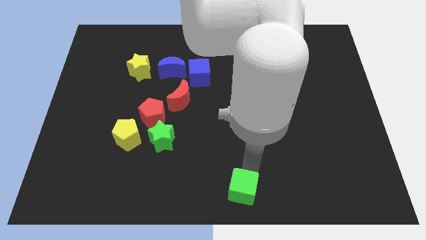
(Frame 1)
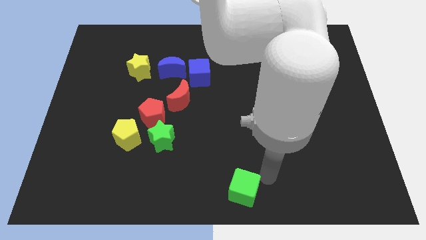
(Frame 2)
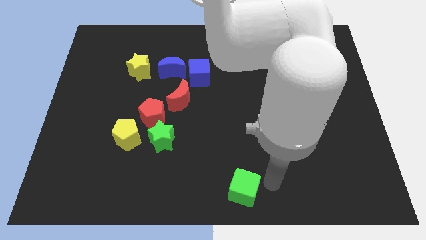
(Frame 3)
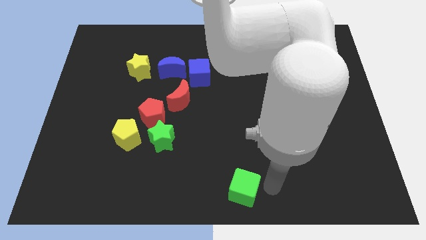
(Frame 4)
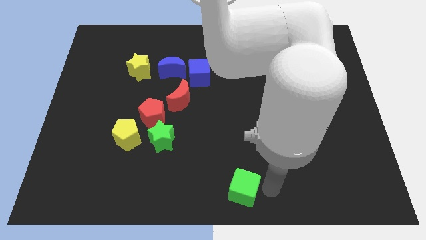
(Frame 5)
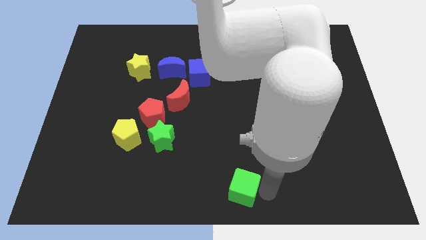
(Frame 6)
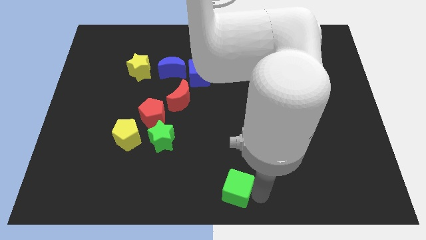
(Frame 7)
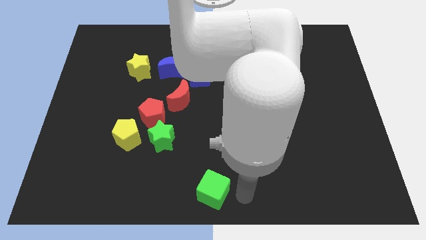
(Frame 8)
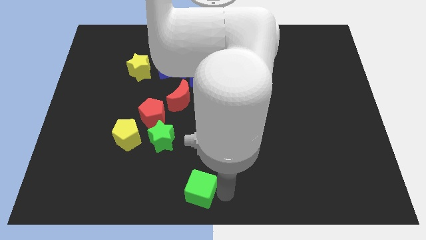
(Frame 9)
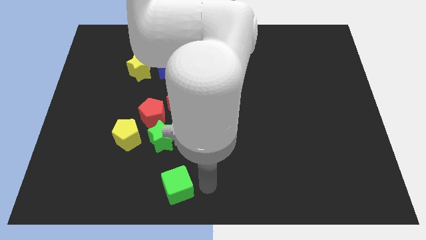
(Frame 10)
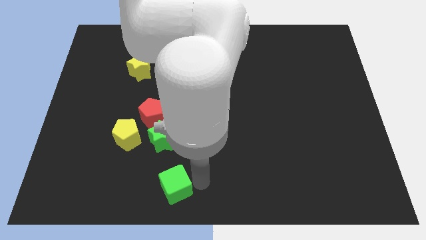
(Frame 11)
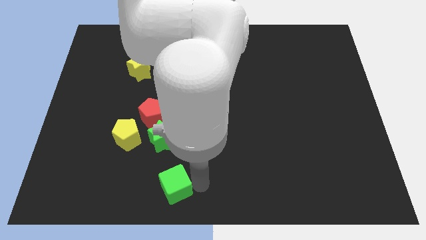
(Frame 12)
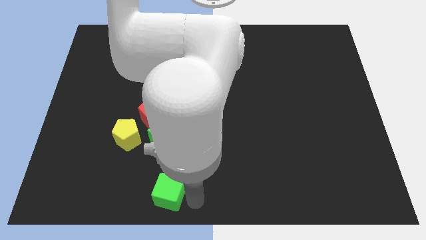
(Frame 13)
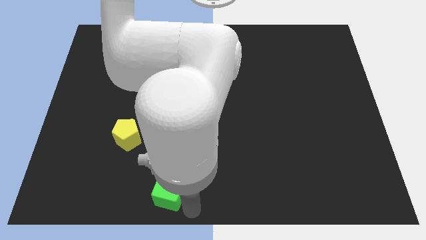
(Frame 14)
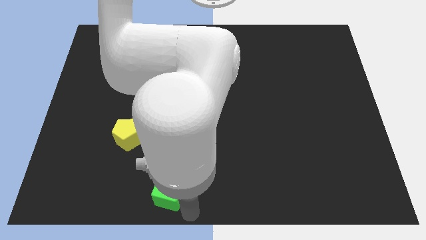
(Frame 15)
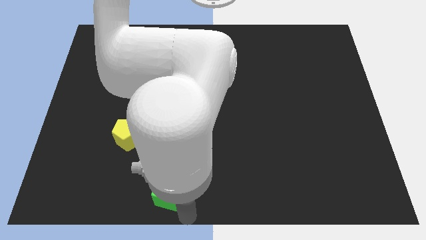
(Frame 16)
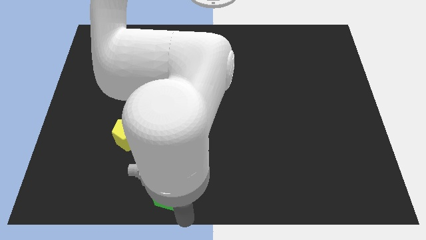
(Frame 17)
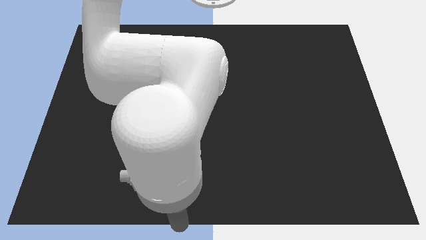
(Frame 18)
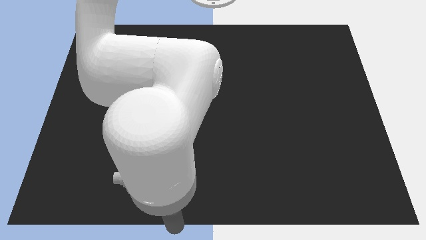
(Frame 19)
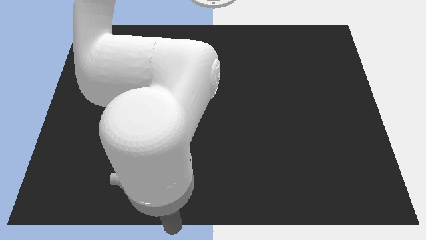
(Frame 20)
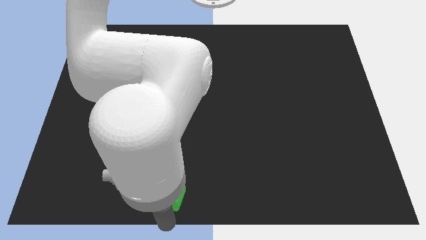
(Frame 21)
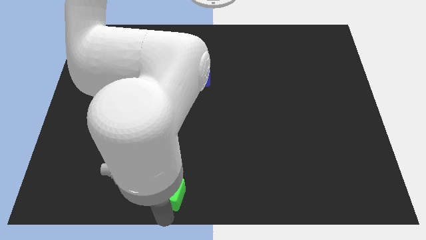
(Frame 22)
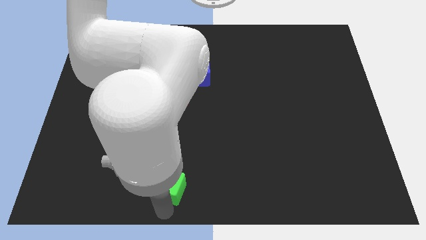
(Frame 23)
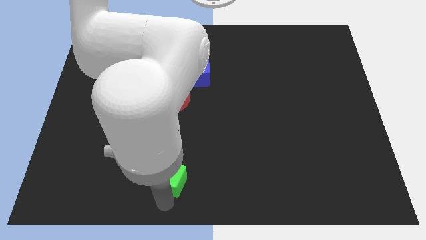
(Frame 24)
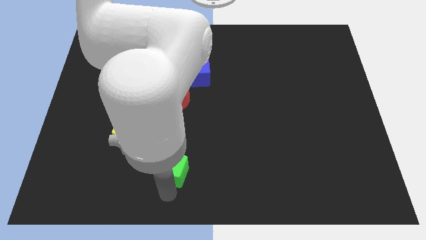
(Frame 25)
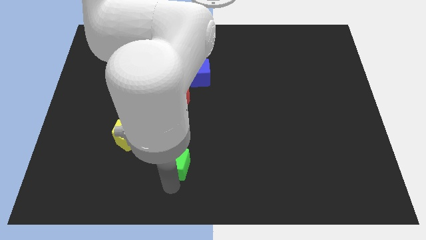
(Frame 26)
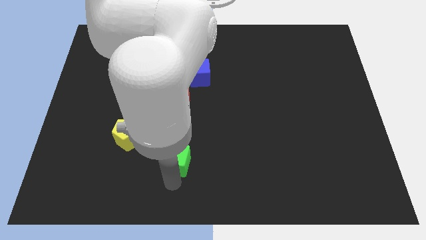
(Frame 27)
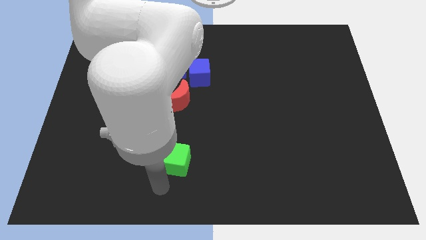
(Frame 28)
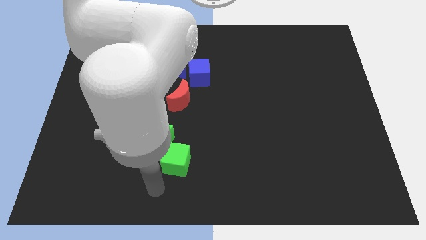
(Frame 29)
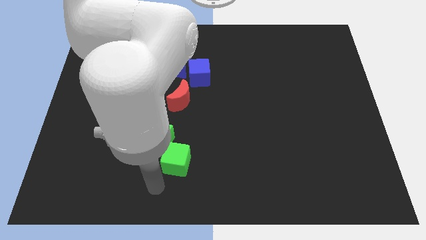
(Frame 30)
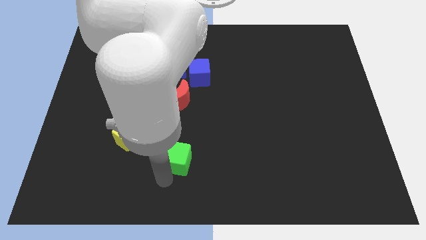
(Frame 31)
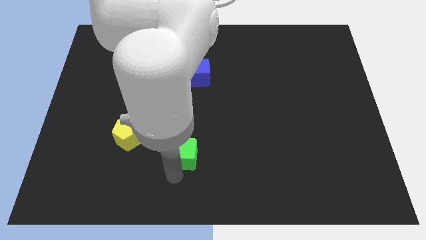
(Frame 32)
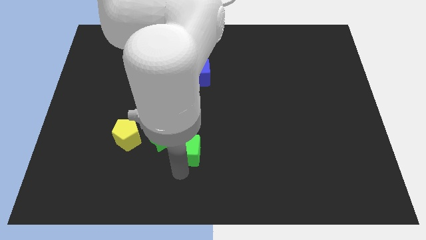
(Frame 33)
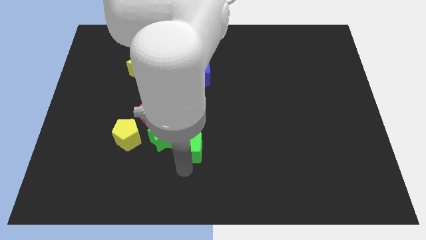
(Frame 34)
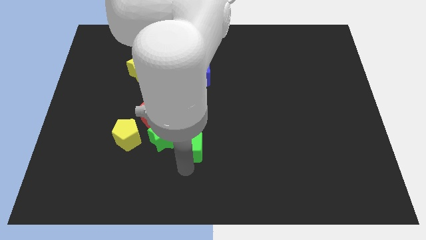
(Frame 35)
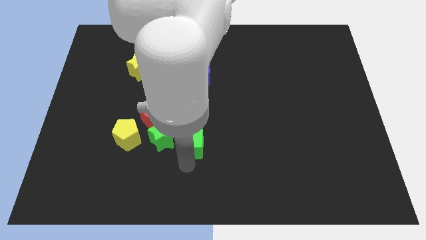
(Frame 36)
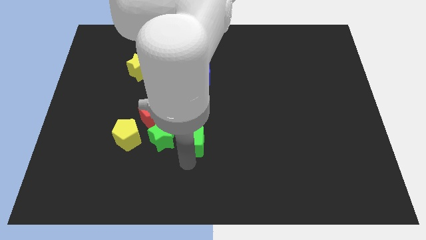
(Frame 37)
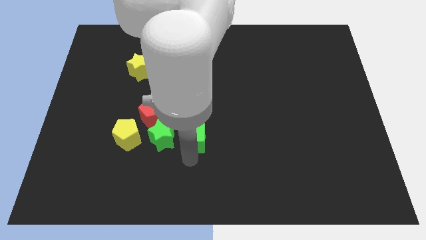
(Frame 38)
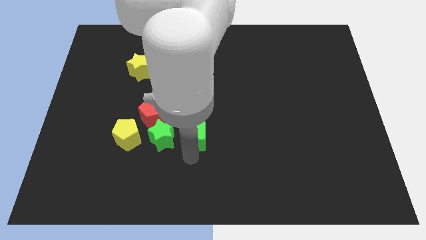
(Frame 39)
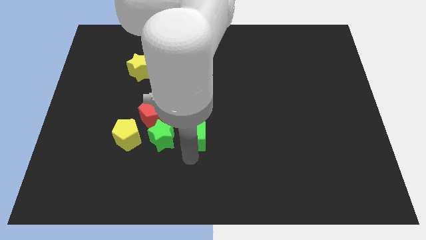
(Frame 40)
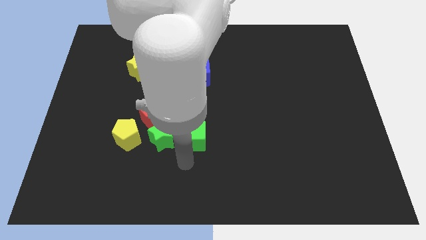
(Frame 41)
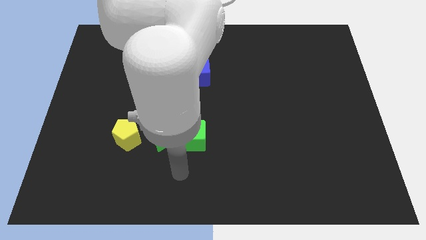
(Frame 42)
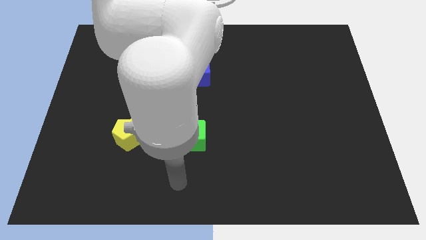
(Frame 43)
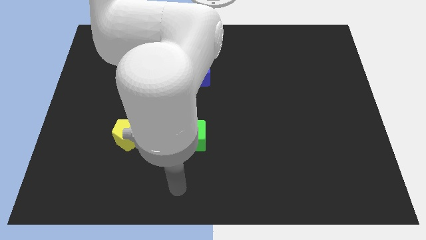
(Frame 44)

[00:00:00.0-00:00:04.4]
place green cube right to green star

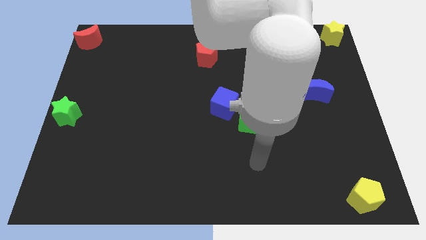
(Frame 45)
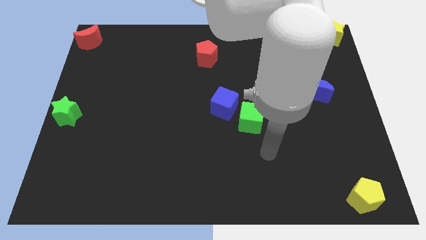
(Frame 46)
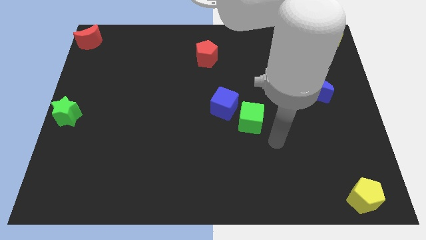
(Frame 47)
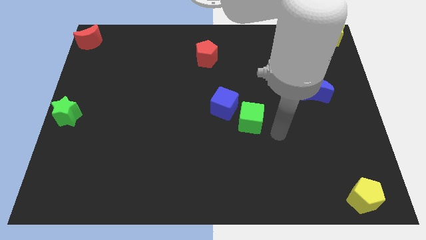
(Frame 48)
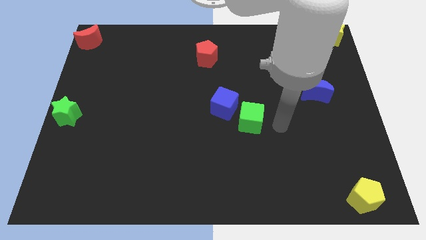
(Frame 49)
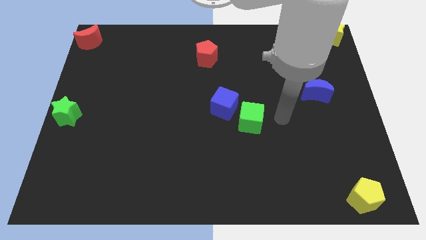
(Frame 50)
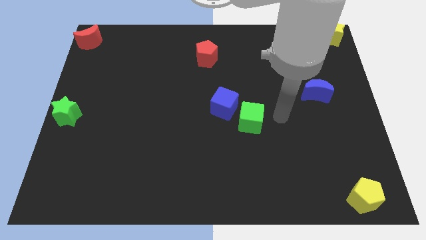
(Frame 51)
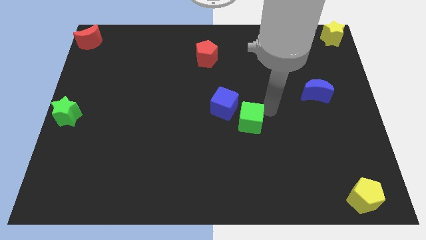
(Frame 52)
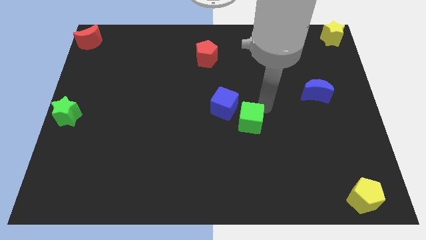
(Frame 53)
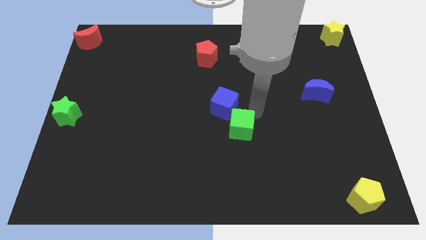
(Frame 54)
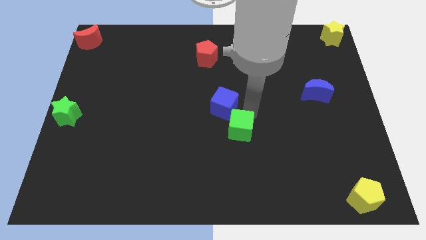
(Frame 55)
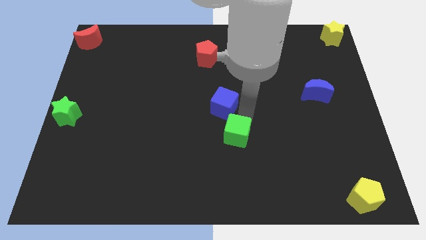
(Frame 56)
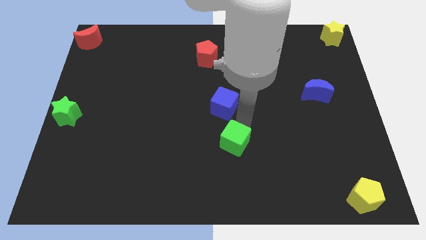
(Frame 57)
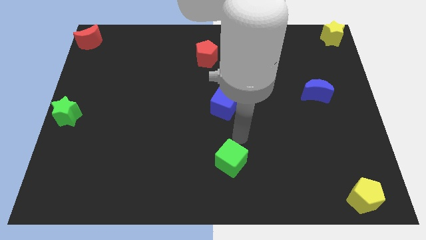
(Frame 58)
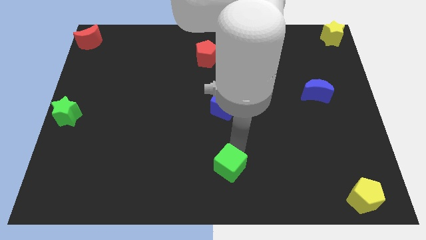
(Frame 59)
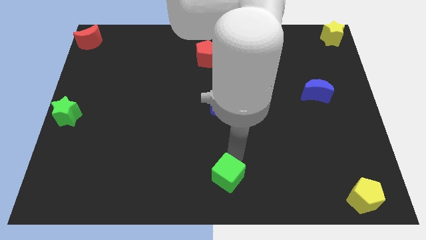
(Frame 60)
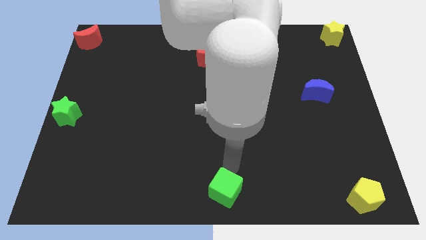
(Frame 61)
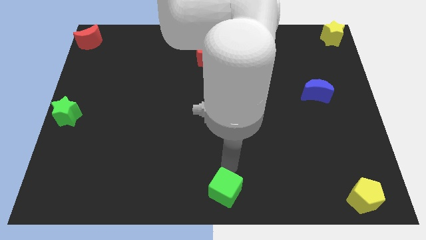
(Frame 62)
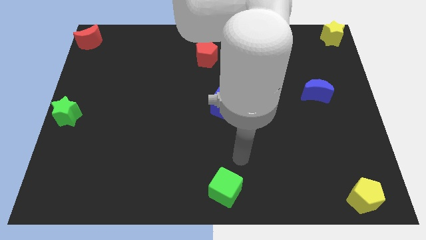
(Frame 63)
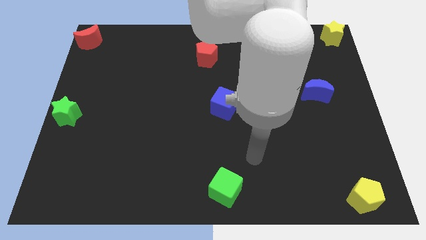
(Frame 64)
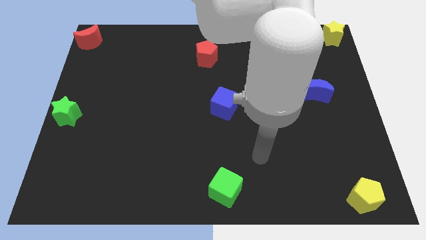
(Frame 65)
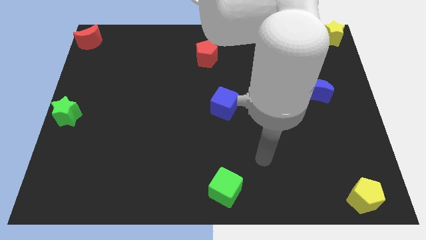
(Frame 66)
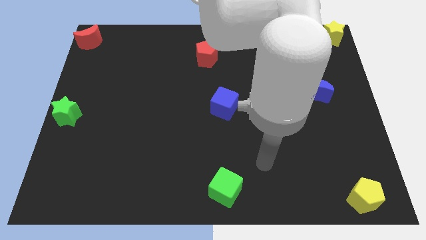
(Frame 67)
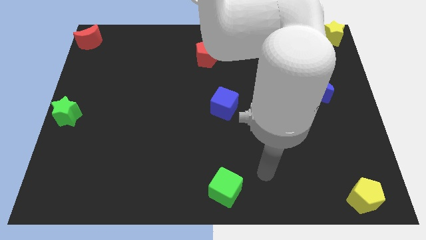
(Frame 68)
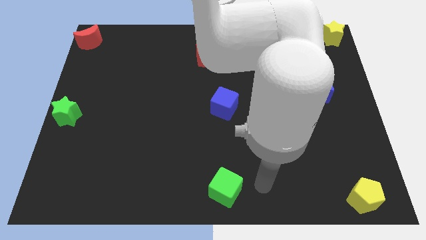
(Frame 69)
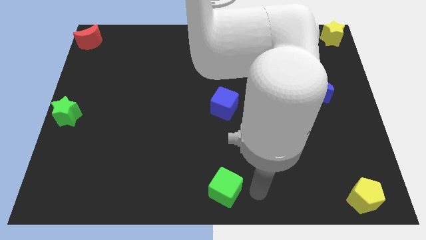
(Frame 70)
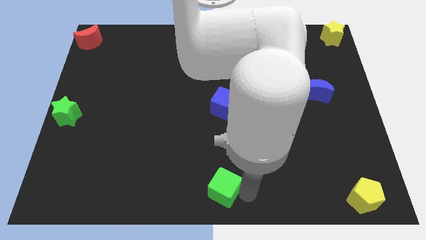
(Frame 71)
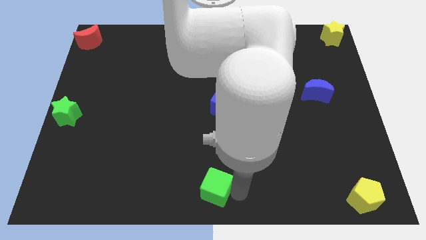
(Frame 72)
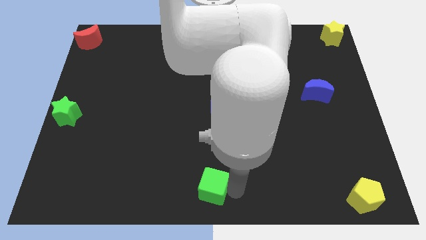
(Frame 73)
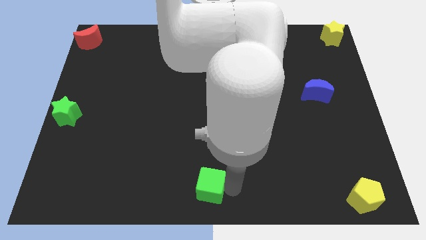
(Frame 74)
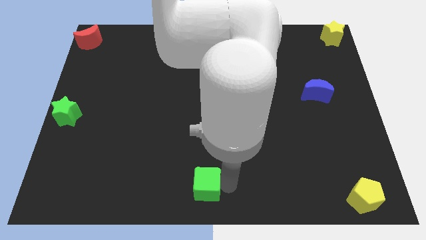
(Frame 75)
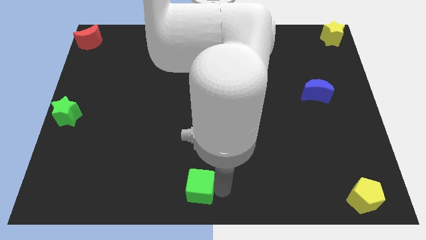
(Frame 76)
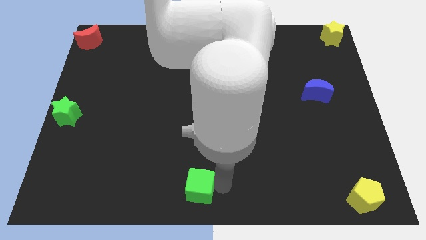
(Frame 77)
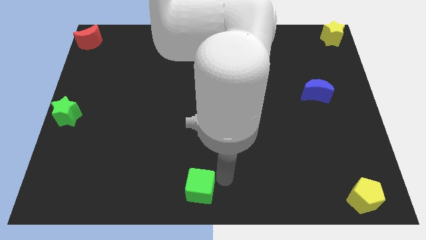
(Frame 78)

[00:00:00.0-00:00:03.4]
push the green cube in the downward direction on the board

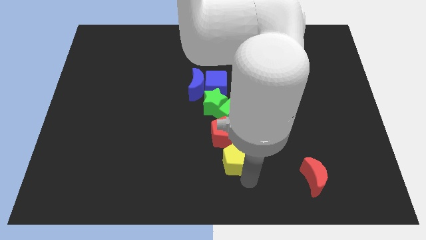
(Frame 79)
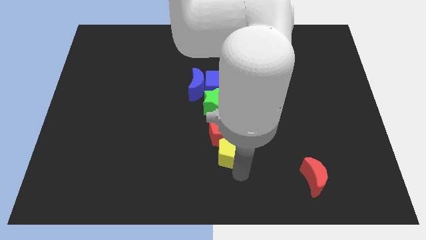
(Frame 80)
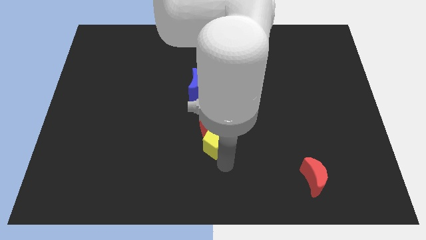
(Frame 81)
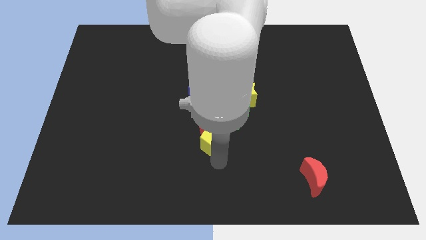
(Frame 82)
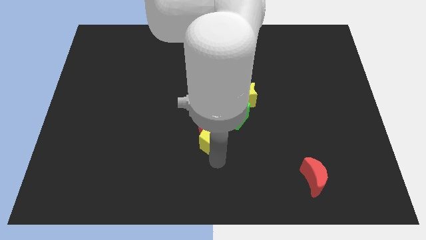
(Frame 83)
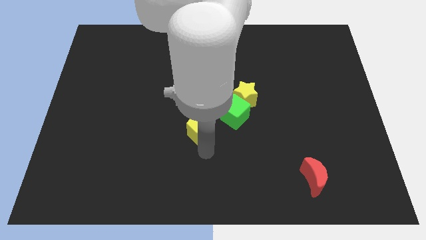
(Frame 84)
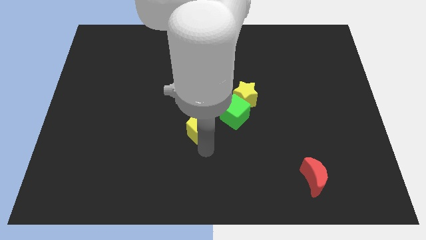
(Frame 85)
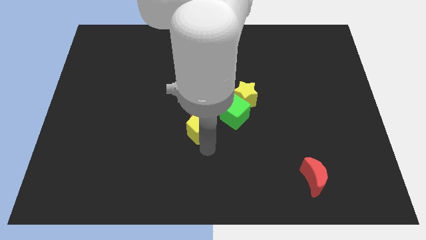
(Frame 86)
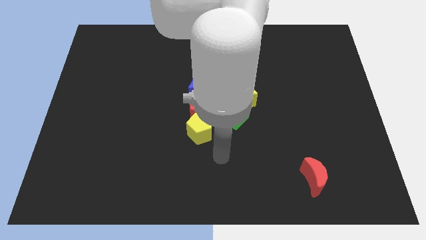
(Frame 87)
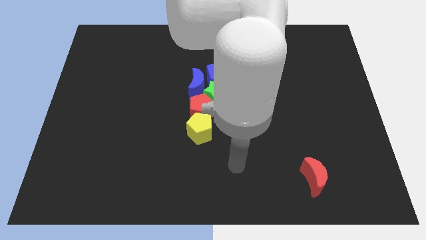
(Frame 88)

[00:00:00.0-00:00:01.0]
push the yellow pentagon into the red pentagon

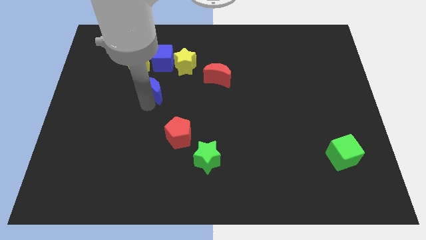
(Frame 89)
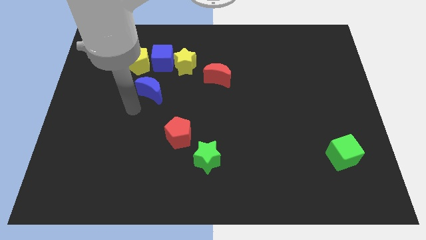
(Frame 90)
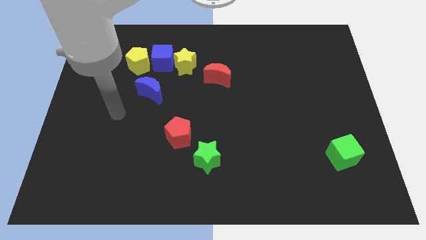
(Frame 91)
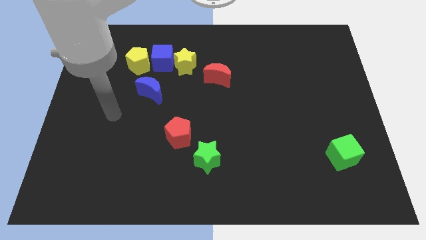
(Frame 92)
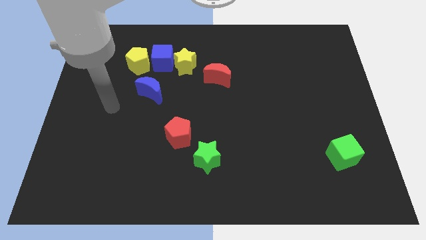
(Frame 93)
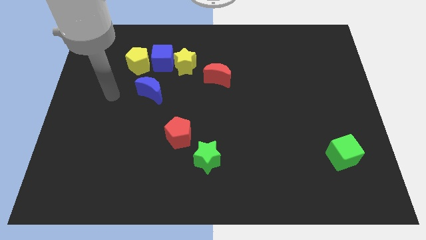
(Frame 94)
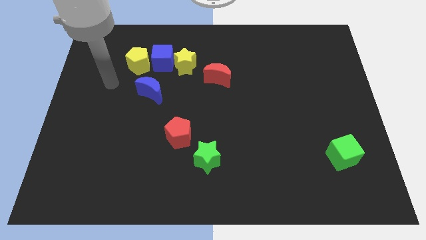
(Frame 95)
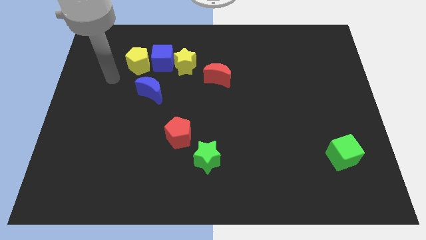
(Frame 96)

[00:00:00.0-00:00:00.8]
move your arm away from blue moon
